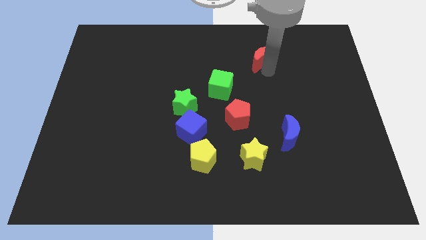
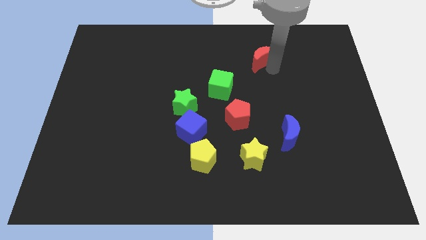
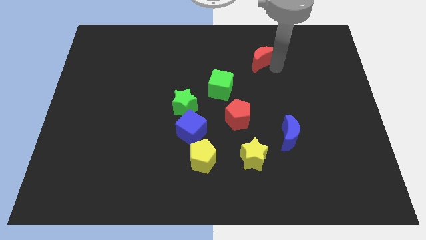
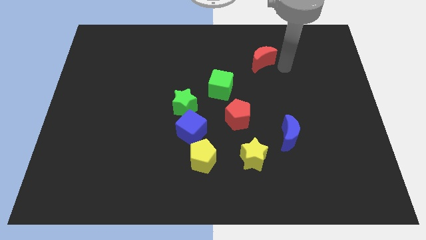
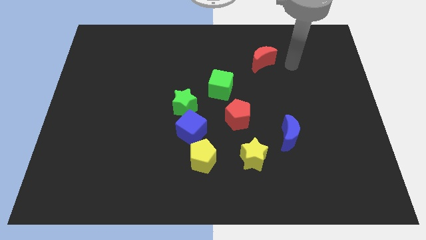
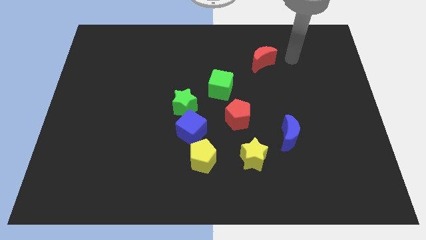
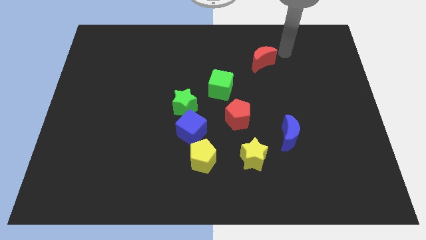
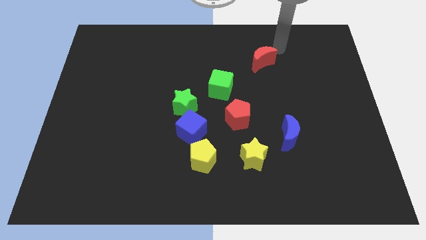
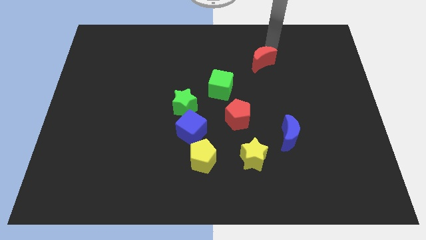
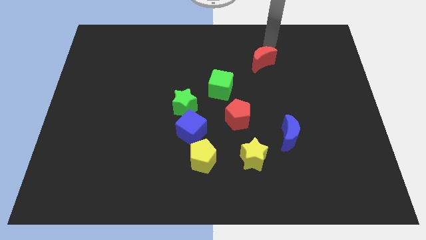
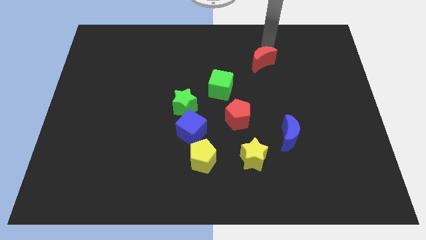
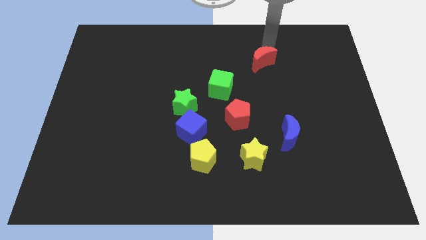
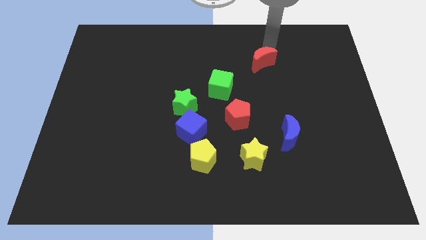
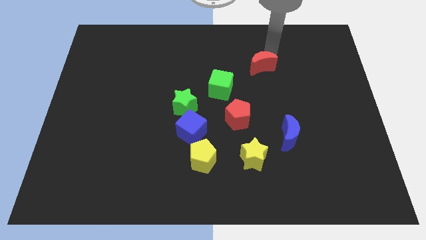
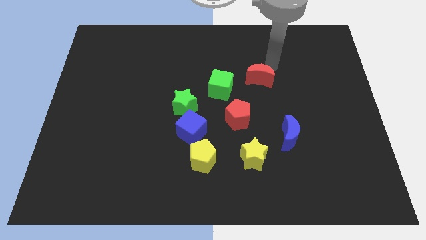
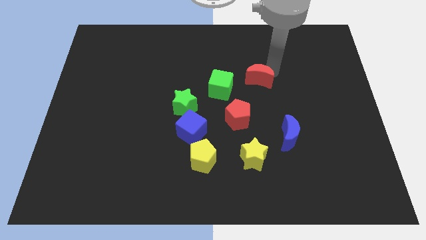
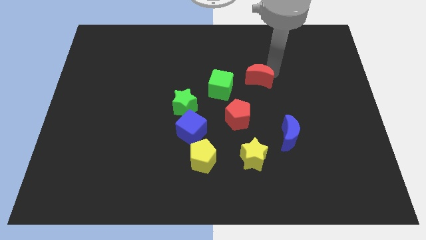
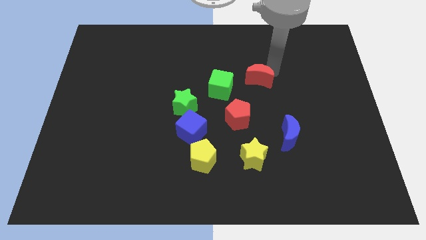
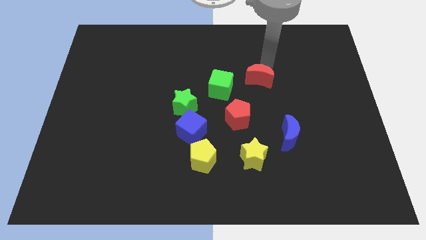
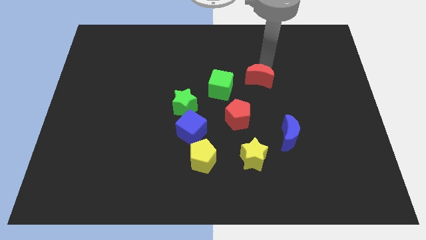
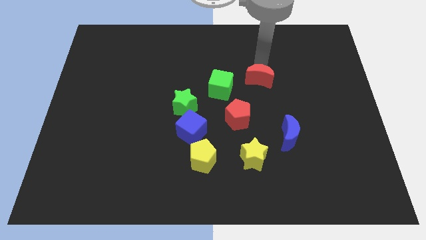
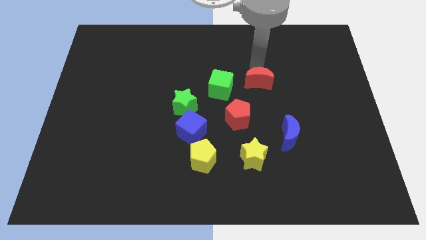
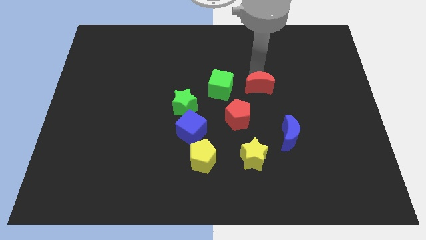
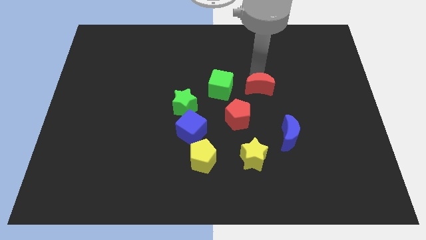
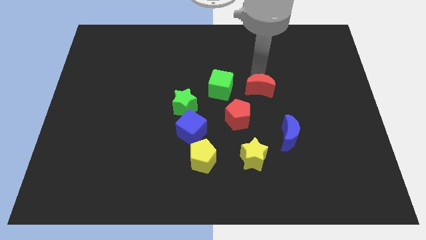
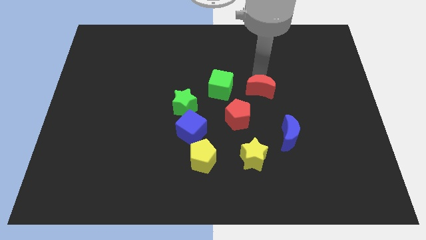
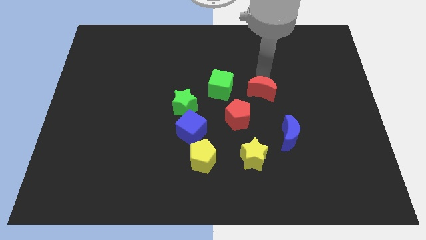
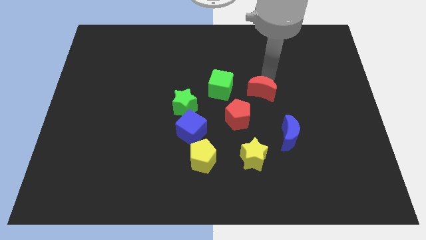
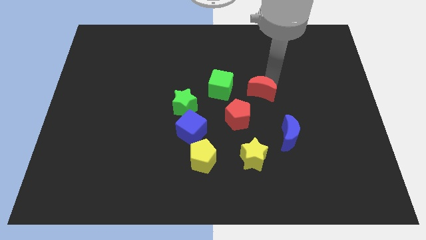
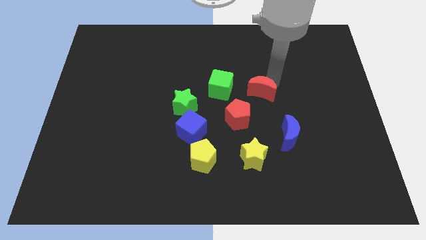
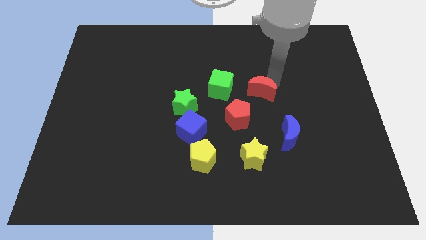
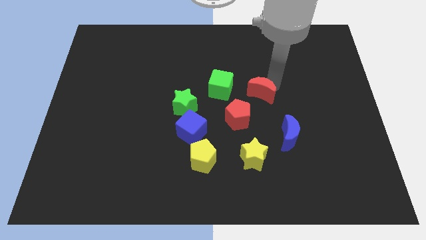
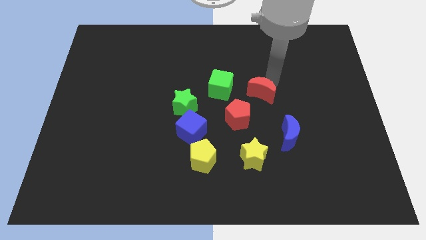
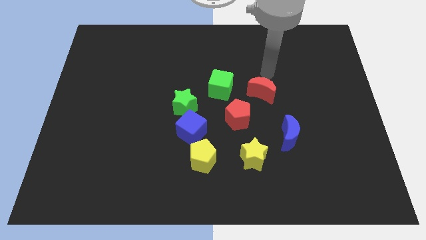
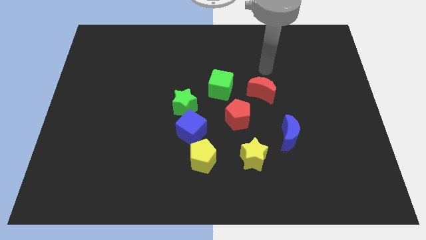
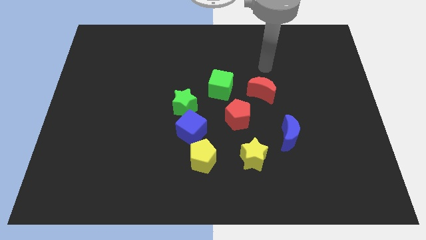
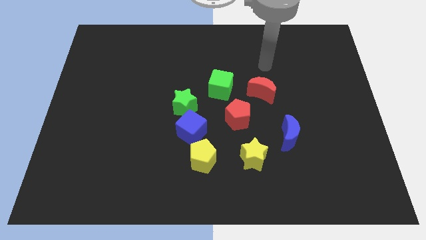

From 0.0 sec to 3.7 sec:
place red pentagon right to green cube to form circle

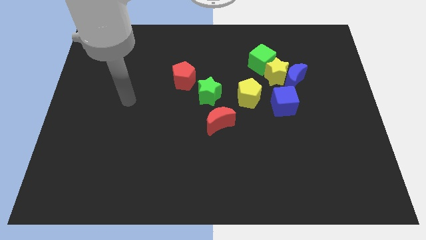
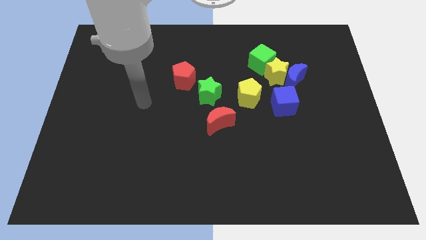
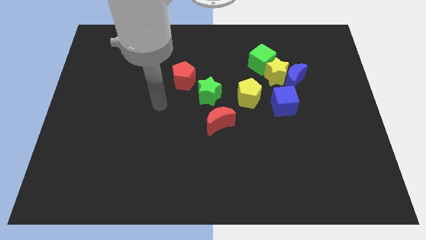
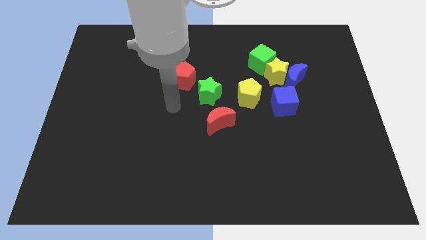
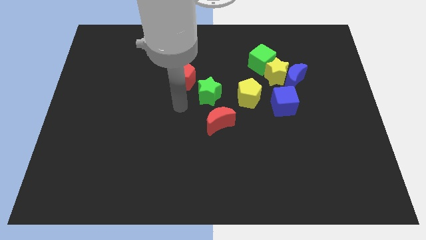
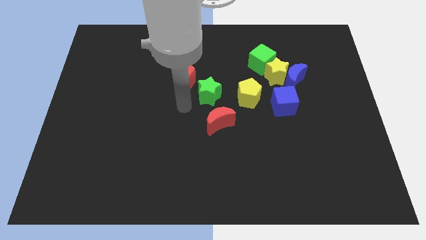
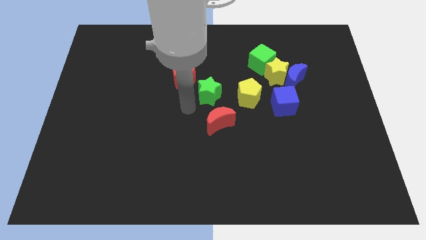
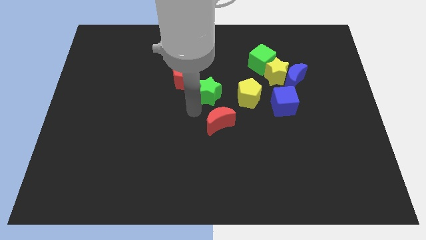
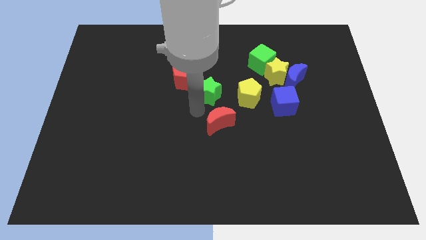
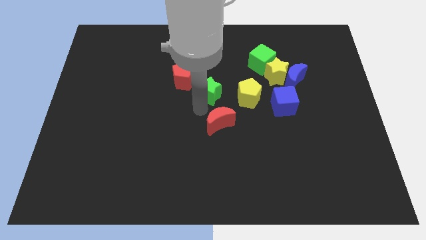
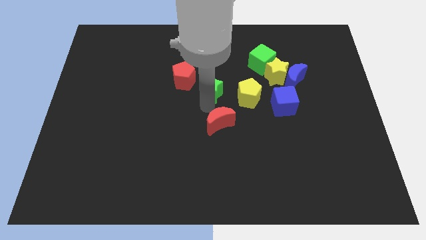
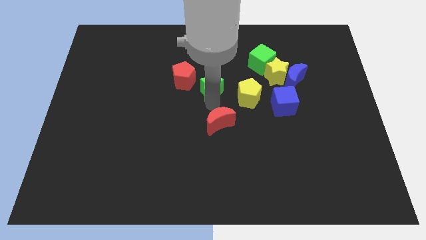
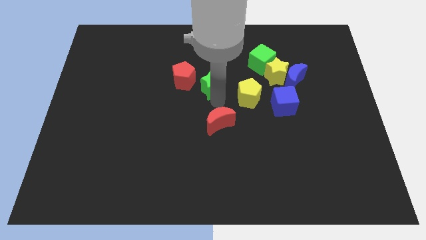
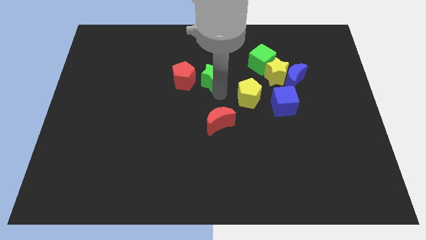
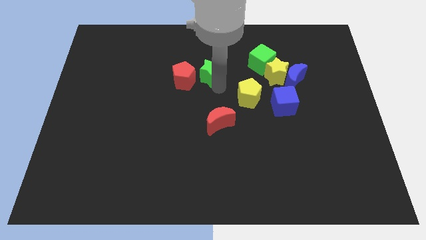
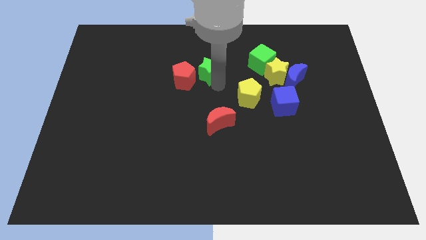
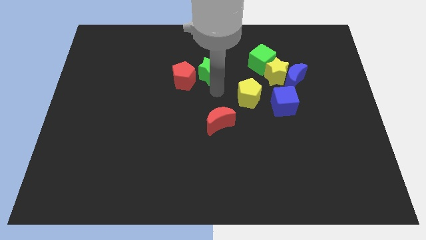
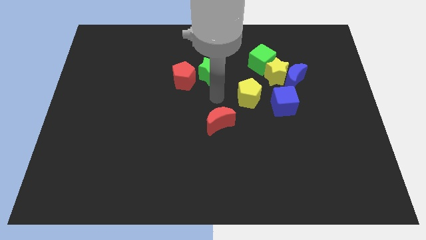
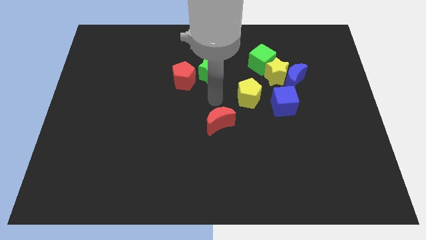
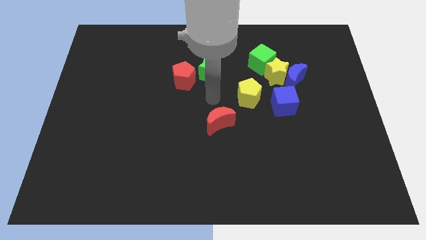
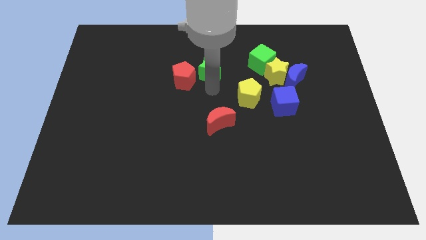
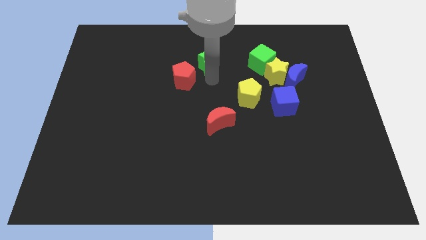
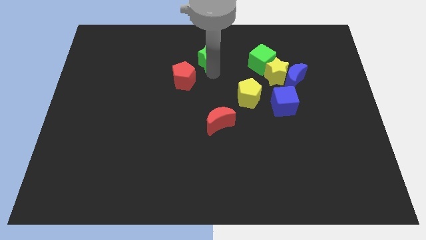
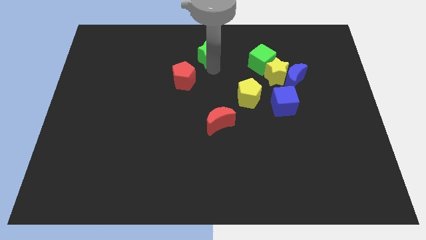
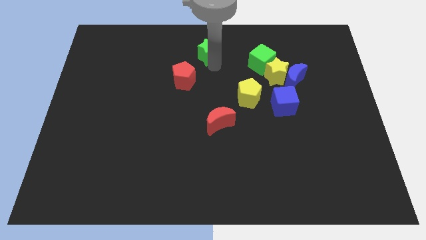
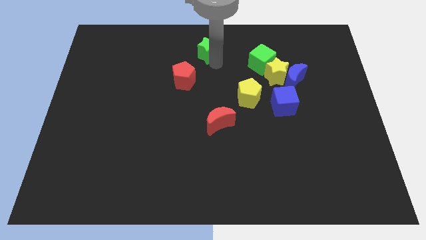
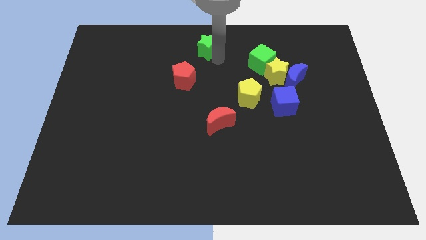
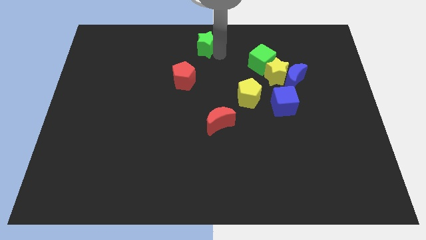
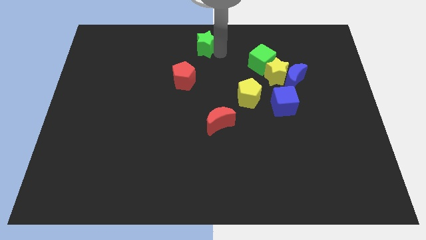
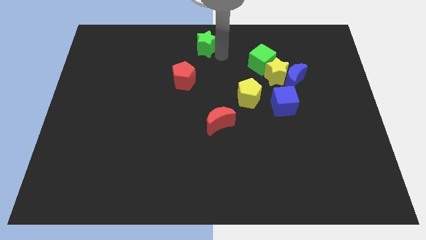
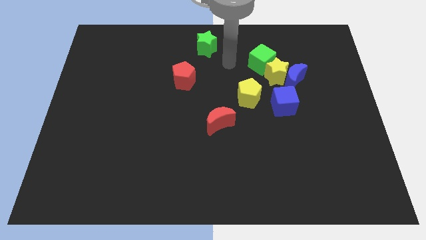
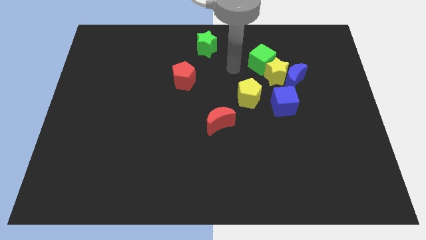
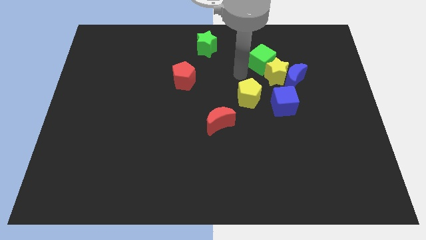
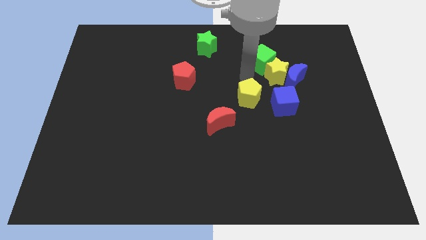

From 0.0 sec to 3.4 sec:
move green star diagonally above red pentagon

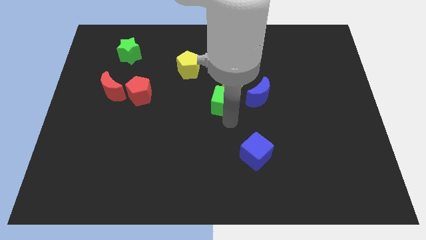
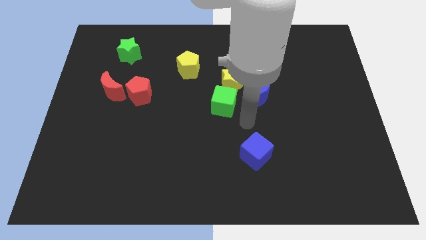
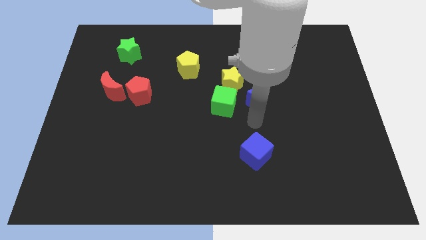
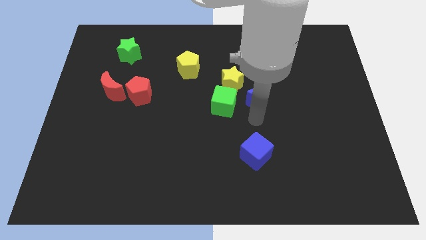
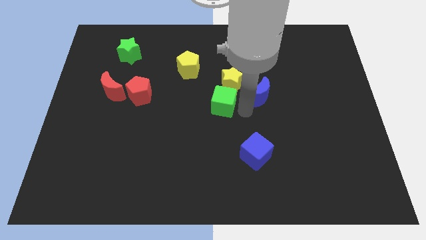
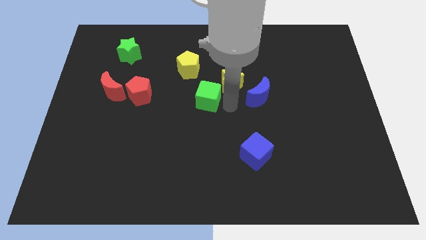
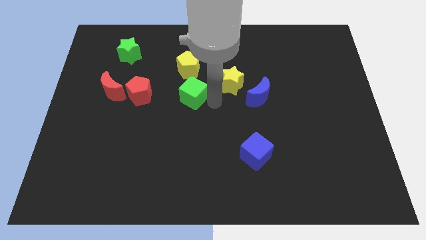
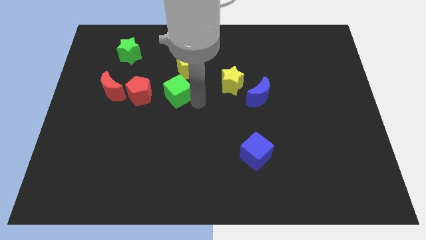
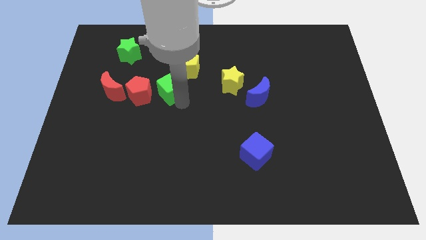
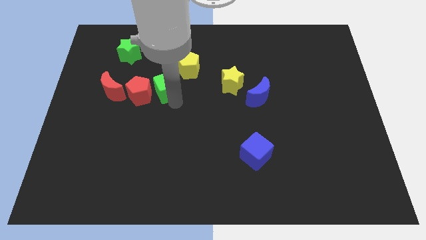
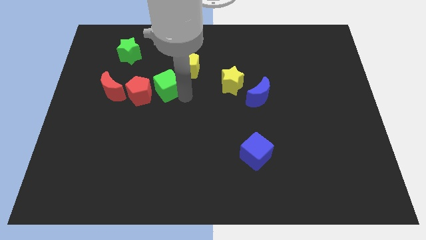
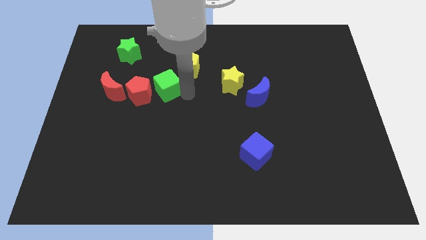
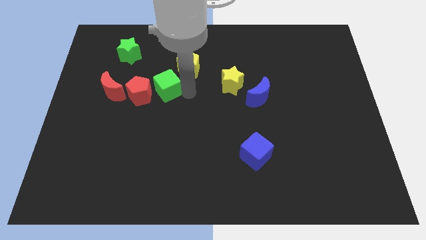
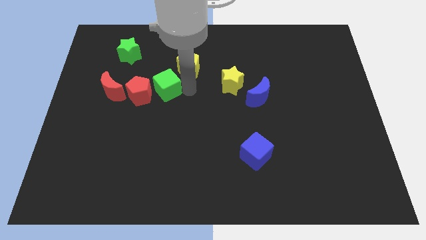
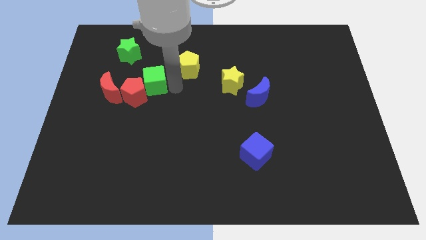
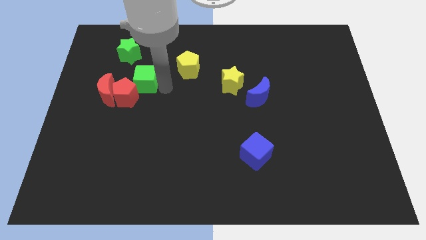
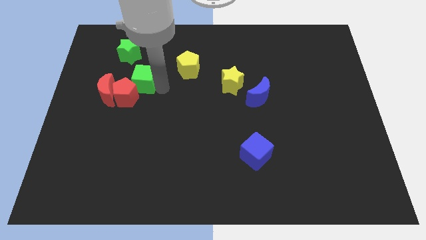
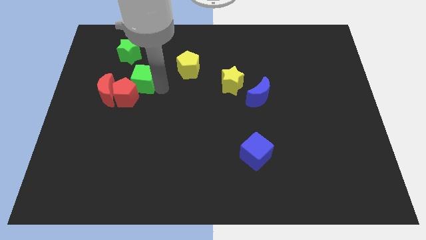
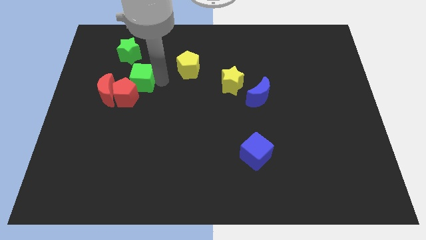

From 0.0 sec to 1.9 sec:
drag the green cube into the red pentagon

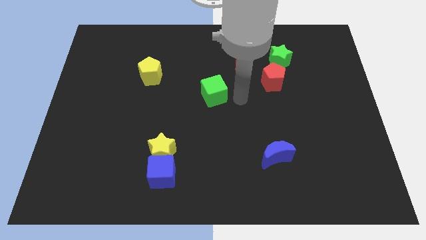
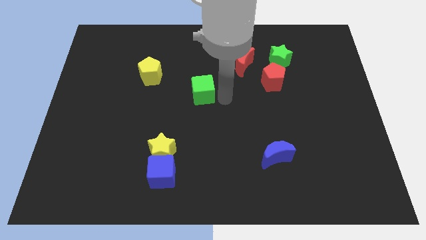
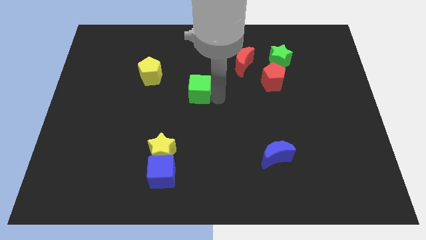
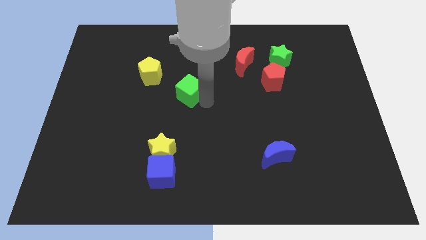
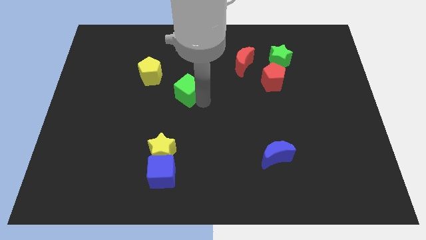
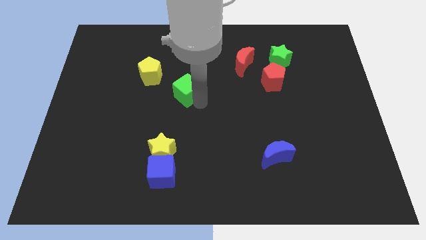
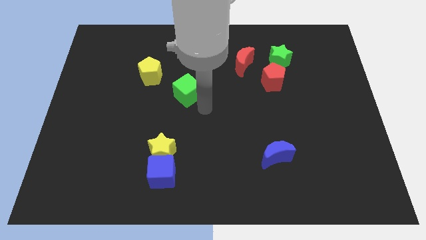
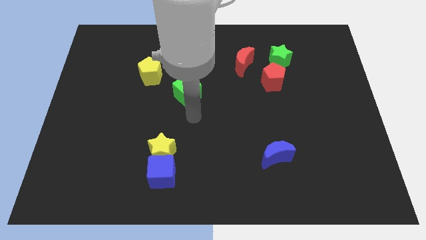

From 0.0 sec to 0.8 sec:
push the green cube towards the left side of the board
